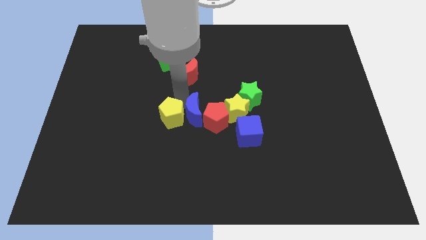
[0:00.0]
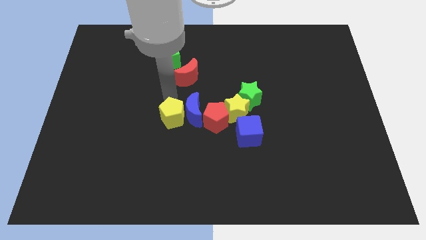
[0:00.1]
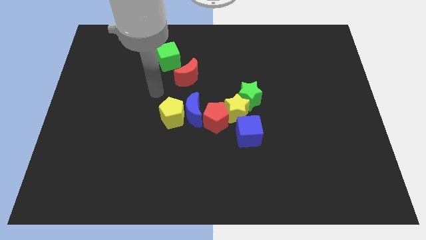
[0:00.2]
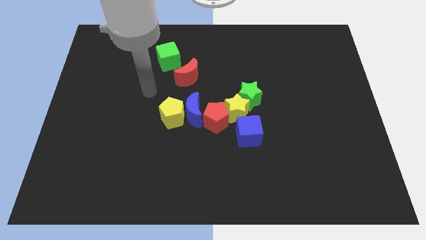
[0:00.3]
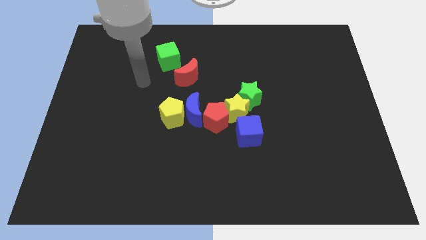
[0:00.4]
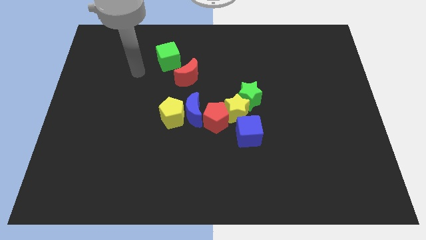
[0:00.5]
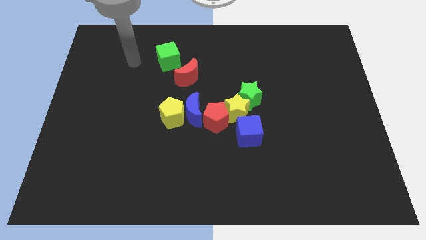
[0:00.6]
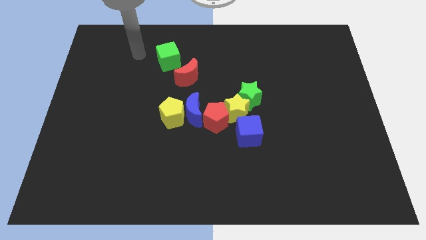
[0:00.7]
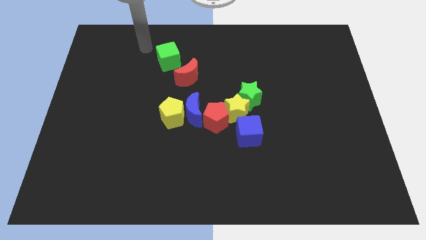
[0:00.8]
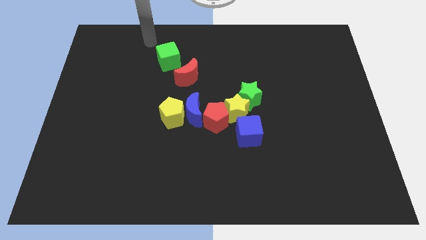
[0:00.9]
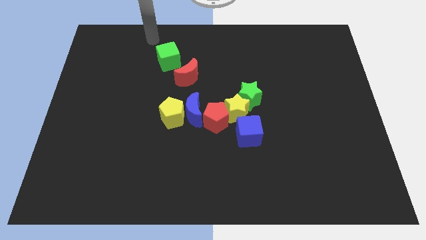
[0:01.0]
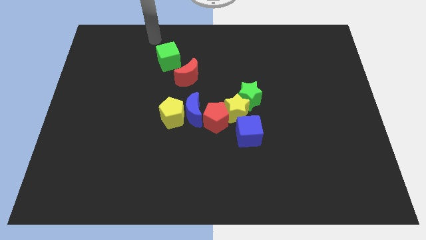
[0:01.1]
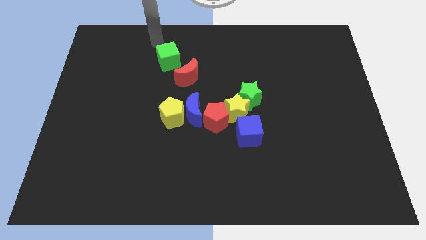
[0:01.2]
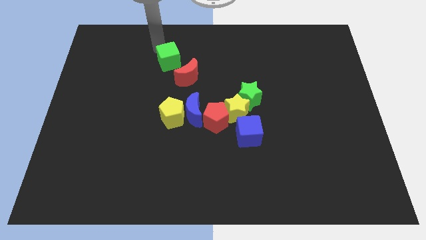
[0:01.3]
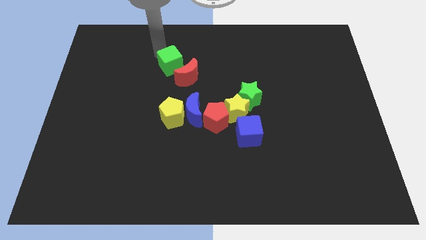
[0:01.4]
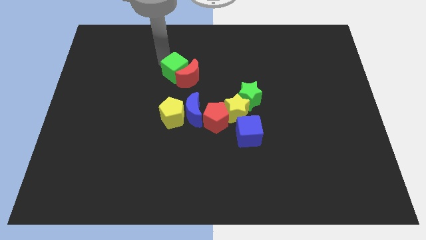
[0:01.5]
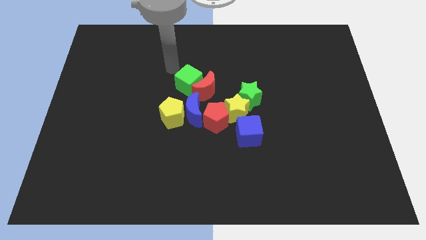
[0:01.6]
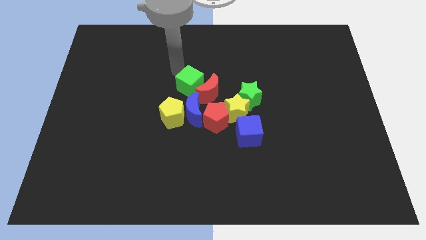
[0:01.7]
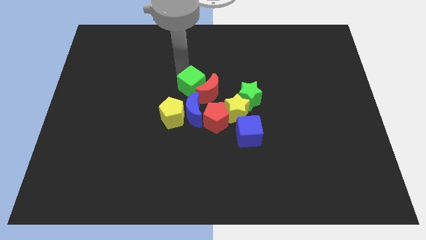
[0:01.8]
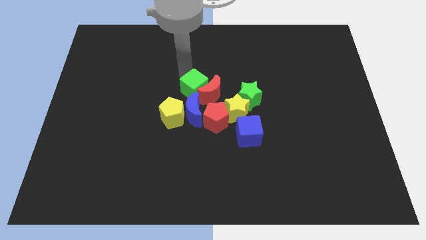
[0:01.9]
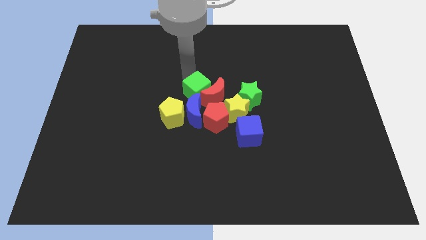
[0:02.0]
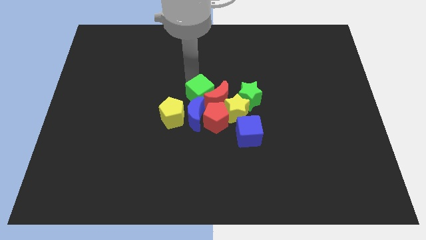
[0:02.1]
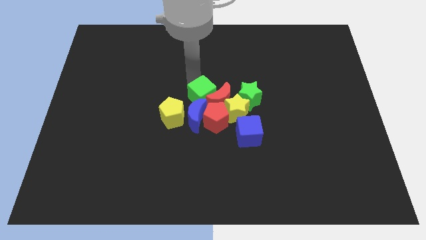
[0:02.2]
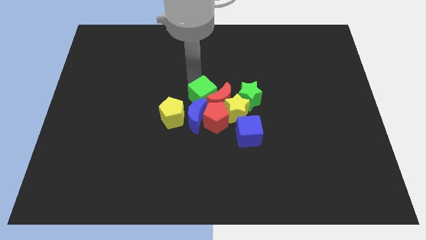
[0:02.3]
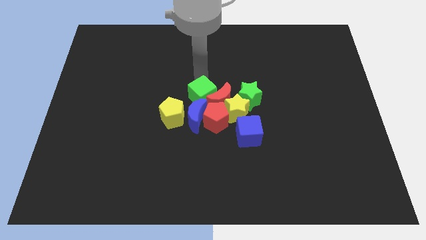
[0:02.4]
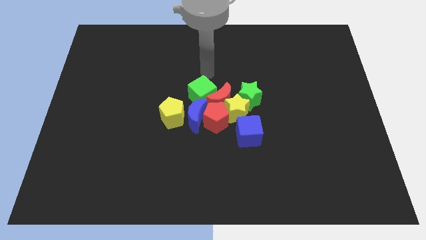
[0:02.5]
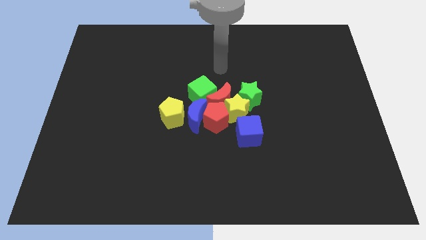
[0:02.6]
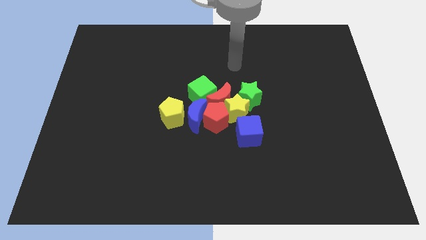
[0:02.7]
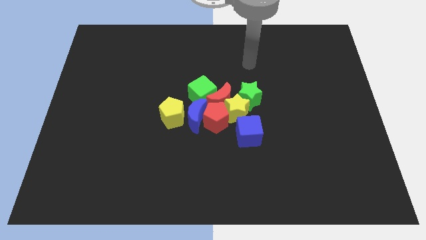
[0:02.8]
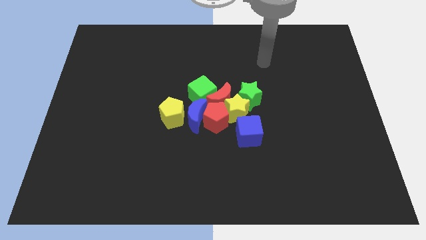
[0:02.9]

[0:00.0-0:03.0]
push the green cube and red moon towards the group of blocks

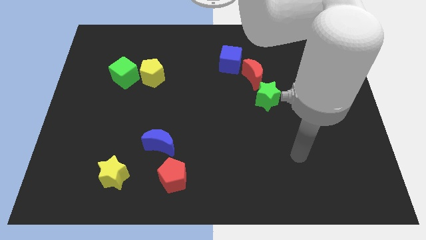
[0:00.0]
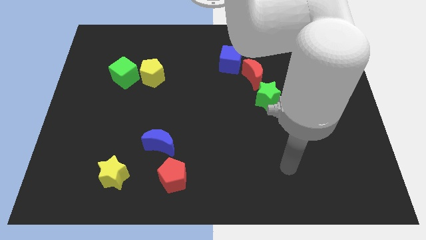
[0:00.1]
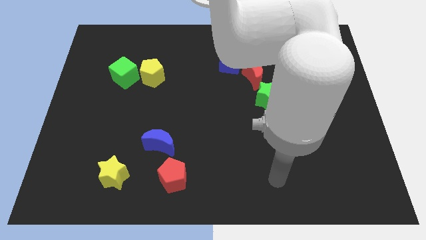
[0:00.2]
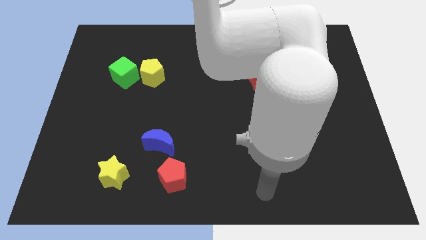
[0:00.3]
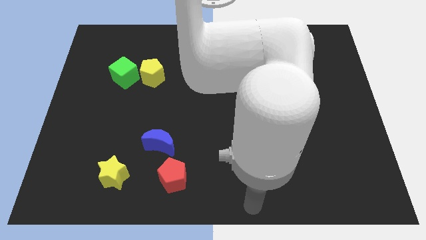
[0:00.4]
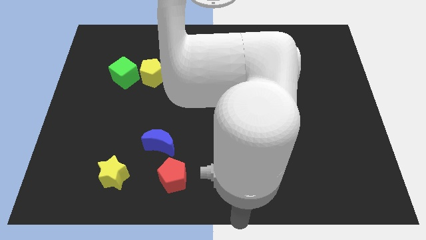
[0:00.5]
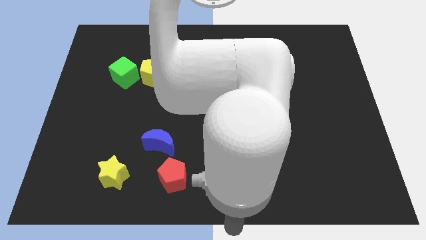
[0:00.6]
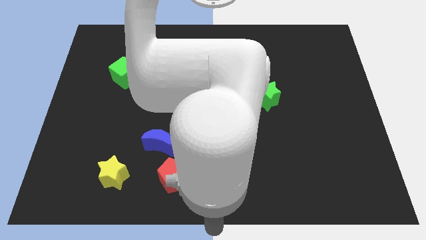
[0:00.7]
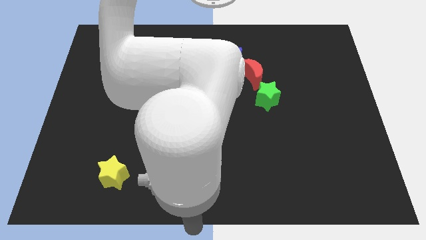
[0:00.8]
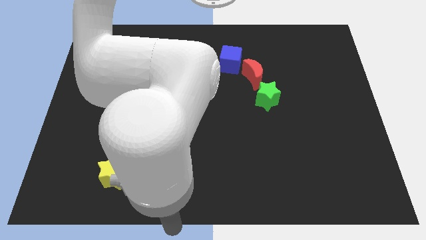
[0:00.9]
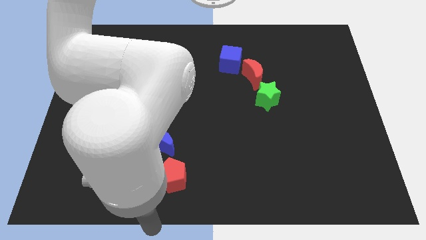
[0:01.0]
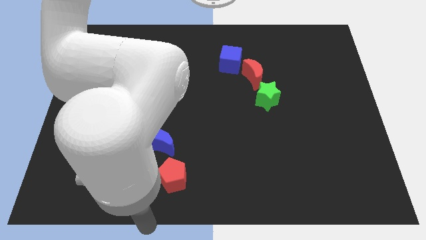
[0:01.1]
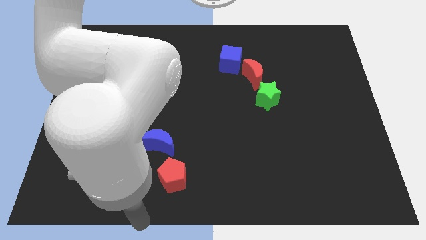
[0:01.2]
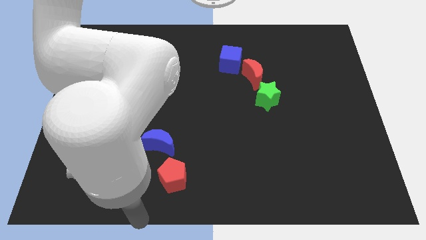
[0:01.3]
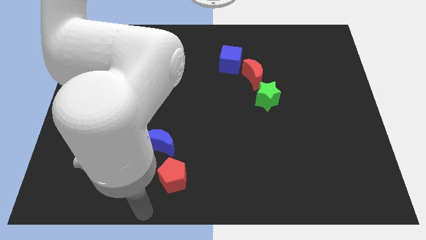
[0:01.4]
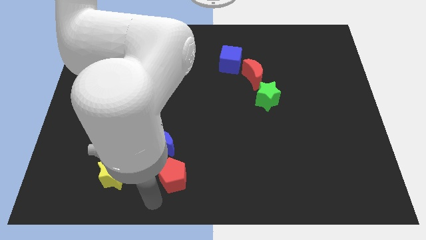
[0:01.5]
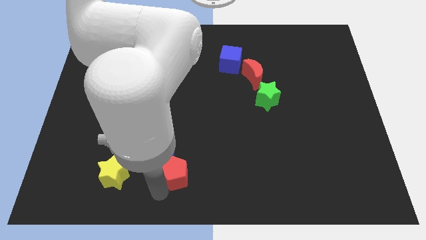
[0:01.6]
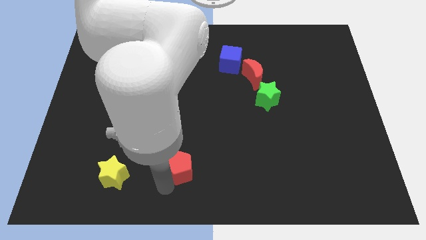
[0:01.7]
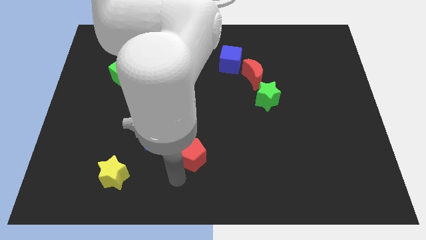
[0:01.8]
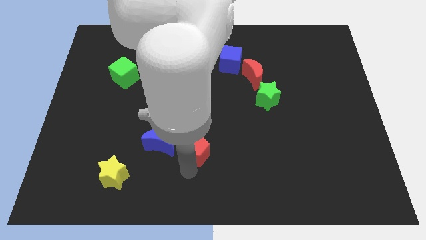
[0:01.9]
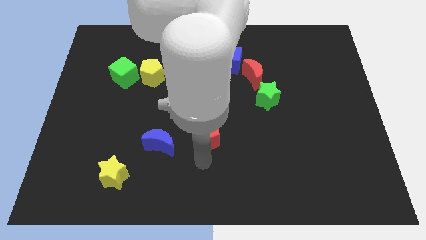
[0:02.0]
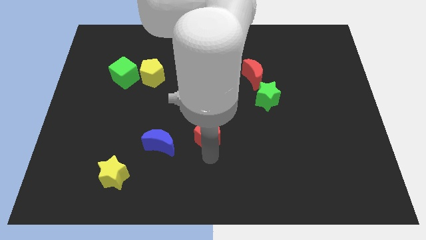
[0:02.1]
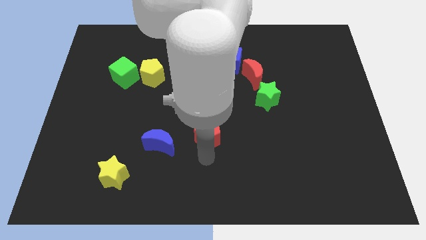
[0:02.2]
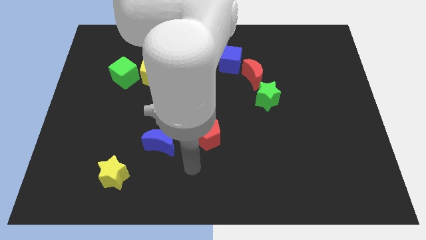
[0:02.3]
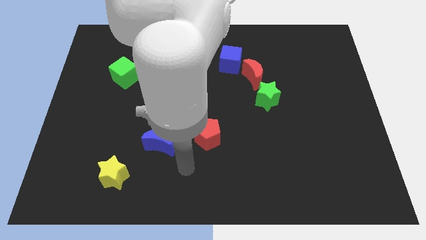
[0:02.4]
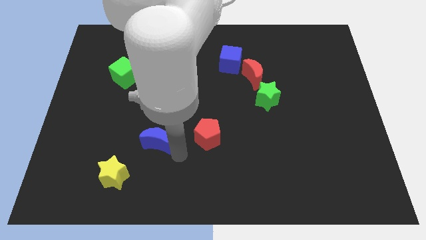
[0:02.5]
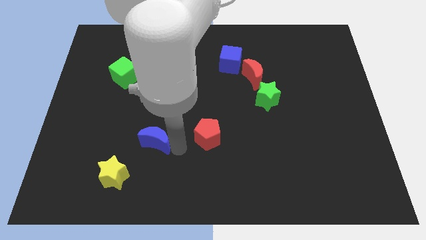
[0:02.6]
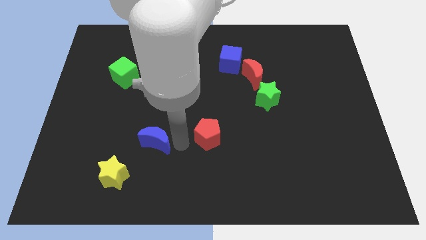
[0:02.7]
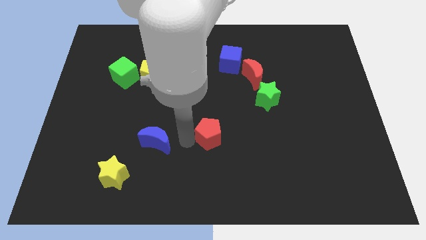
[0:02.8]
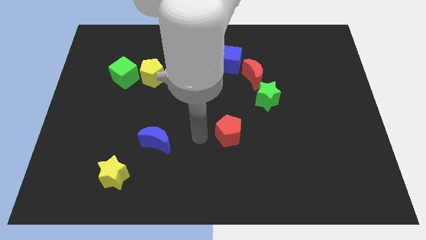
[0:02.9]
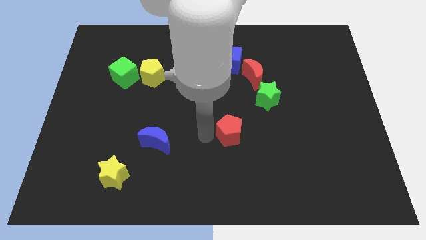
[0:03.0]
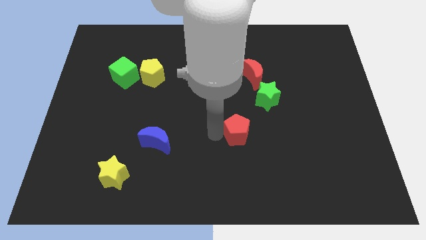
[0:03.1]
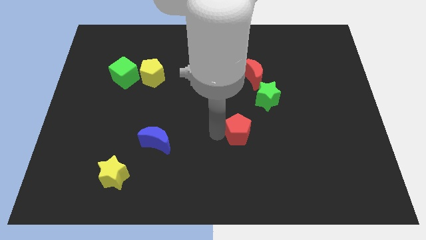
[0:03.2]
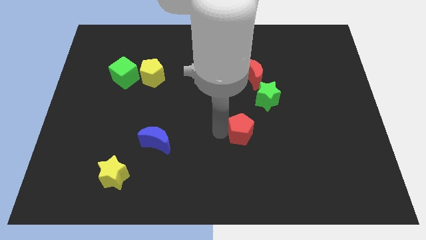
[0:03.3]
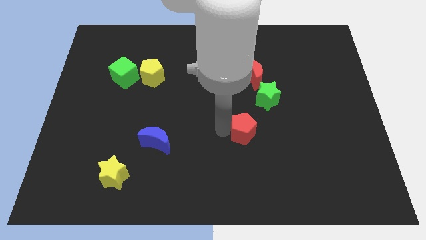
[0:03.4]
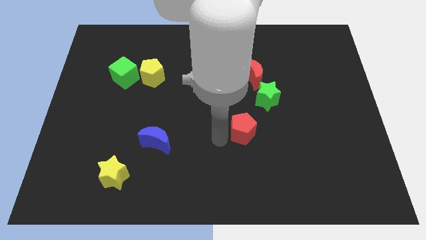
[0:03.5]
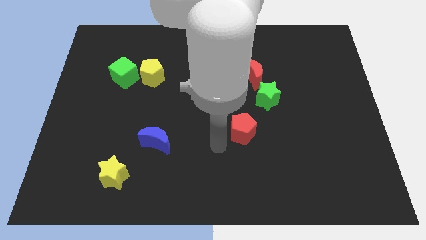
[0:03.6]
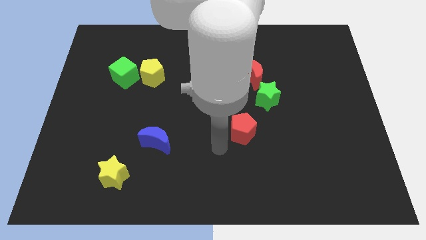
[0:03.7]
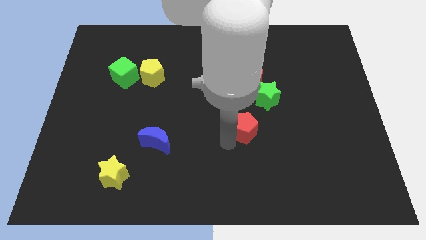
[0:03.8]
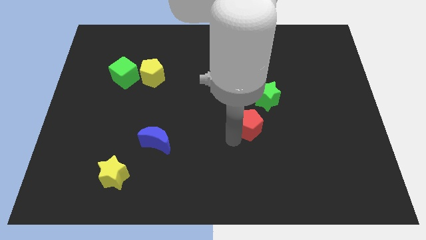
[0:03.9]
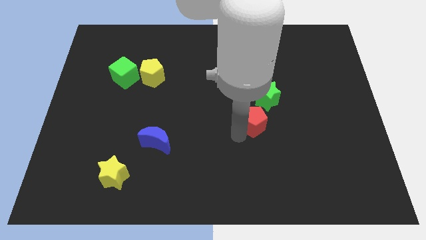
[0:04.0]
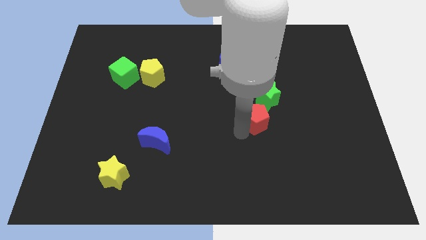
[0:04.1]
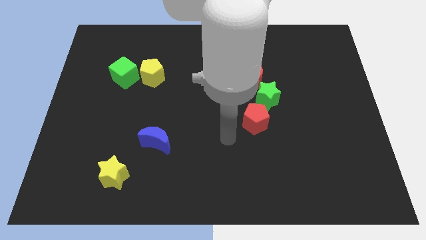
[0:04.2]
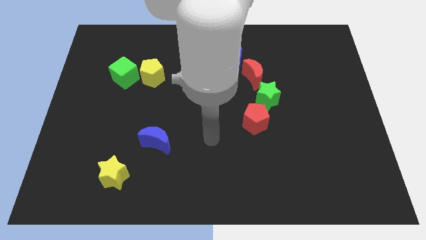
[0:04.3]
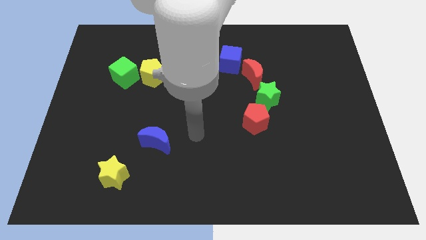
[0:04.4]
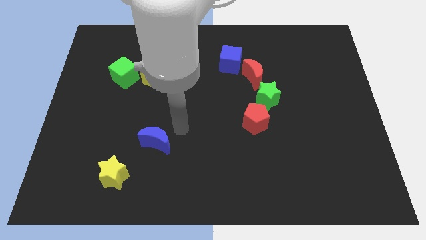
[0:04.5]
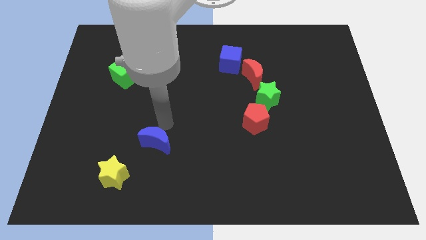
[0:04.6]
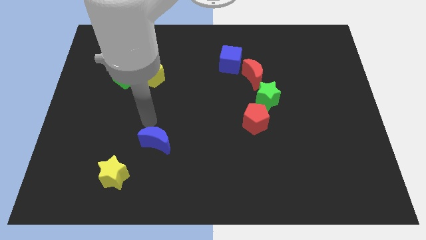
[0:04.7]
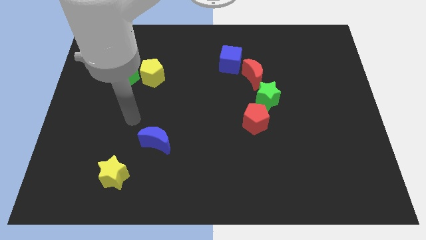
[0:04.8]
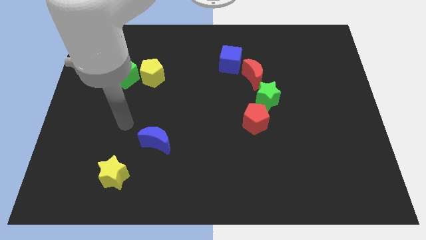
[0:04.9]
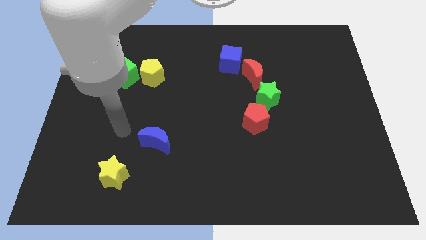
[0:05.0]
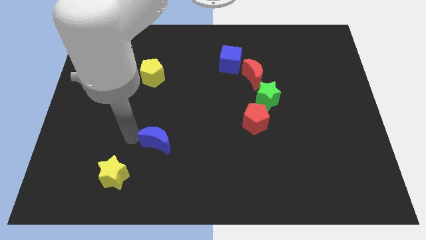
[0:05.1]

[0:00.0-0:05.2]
move the red pentagon to the bottom left of the green star

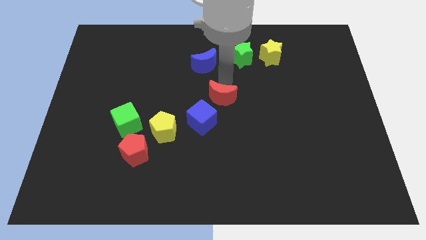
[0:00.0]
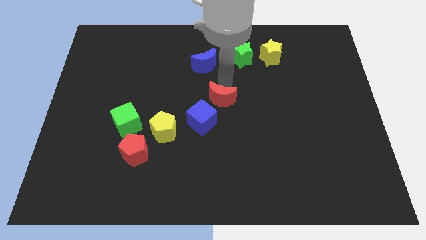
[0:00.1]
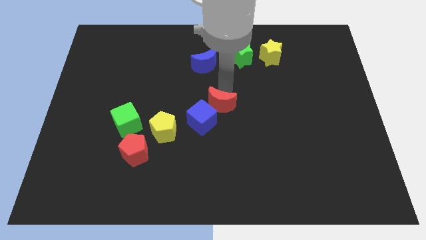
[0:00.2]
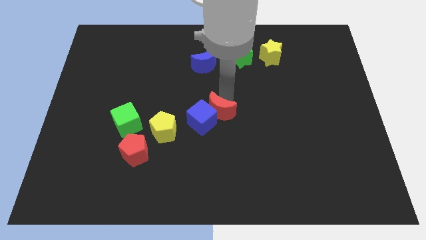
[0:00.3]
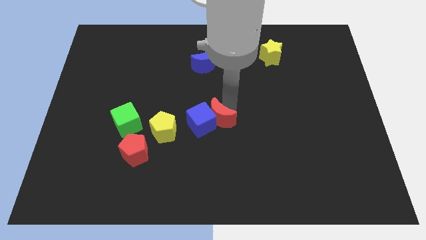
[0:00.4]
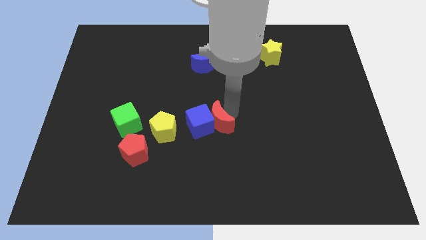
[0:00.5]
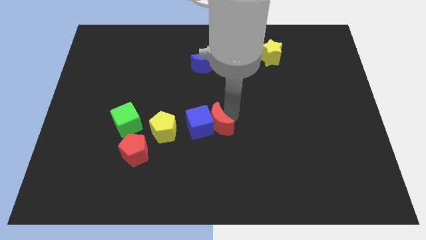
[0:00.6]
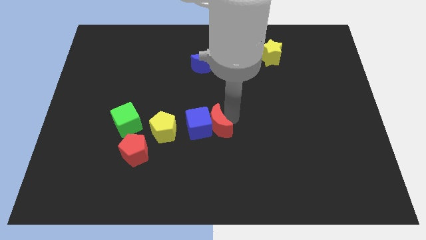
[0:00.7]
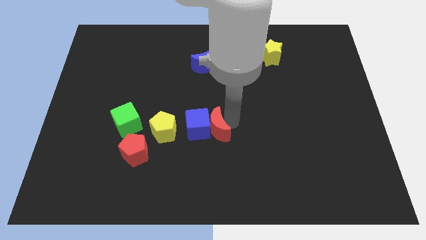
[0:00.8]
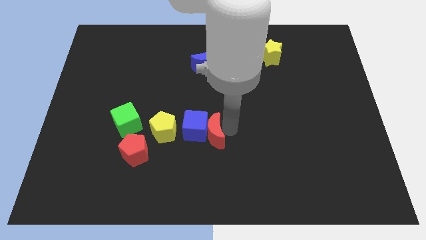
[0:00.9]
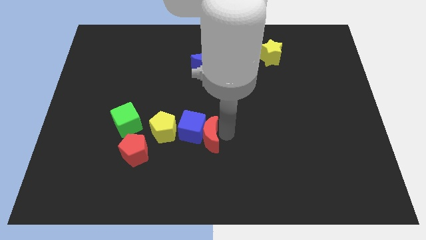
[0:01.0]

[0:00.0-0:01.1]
move red moon to the into the blue cube
